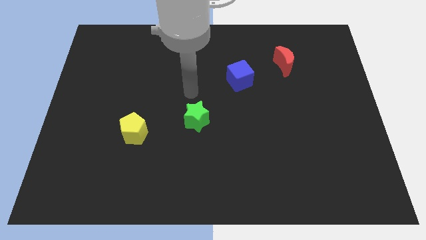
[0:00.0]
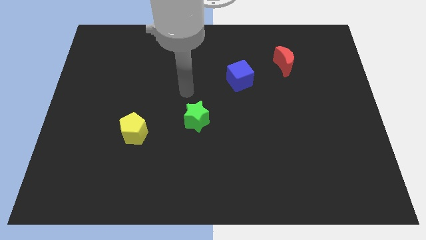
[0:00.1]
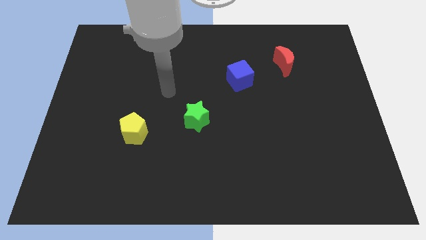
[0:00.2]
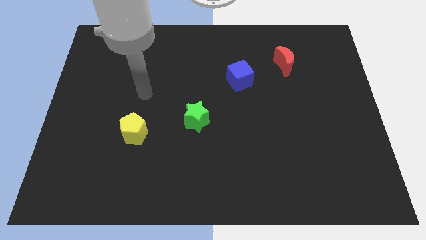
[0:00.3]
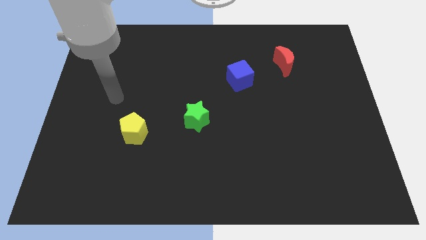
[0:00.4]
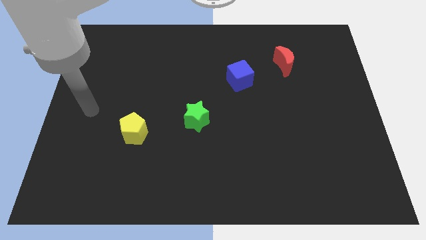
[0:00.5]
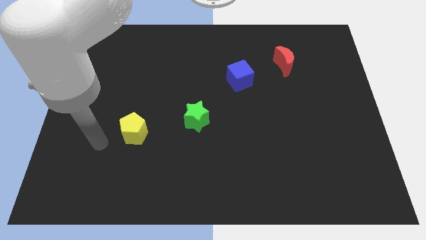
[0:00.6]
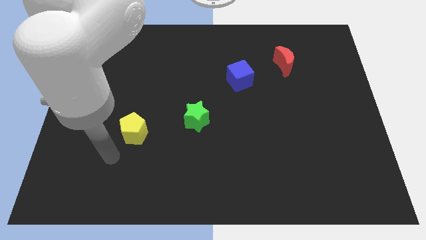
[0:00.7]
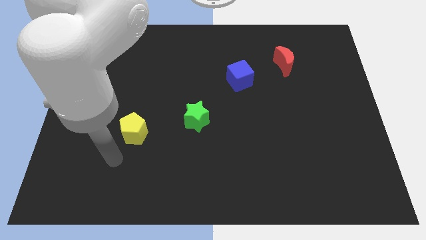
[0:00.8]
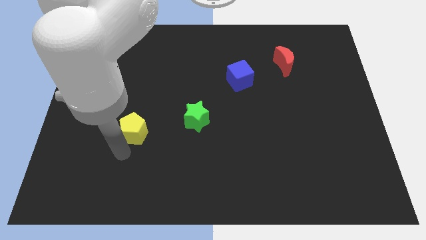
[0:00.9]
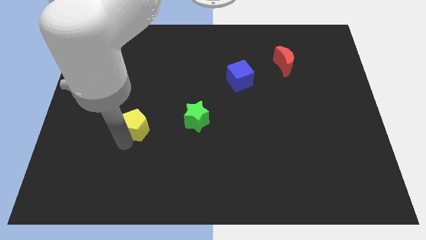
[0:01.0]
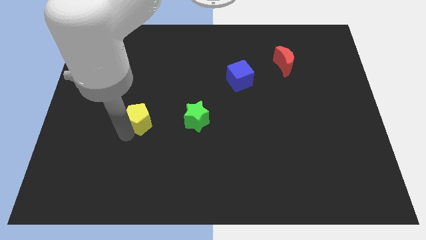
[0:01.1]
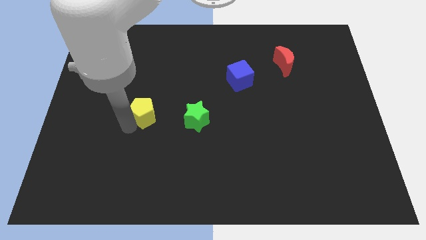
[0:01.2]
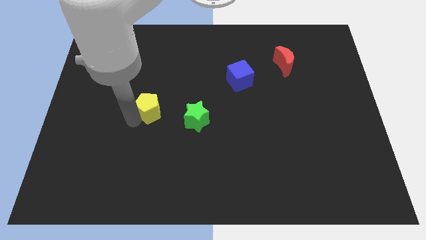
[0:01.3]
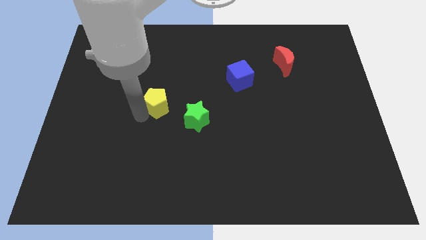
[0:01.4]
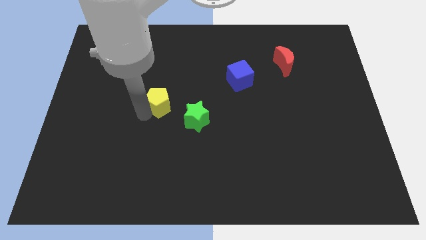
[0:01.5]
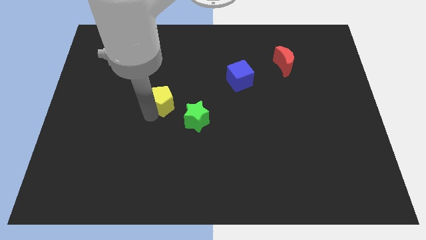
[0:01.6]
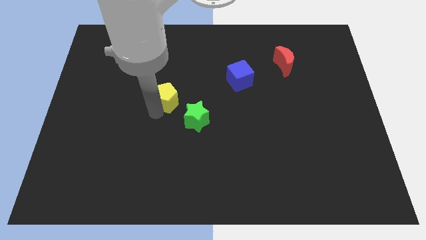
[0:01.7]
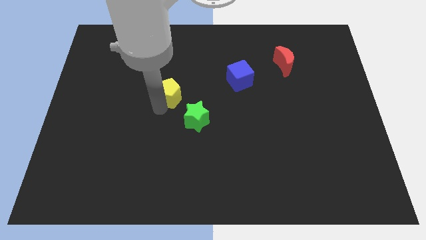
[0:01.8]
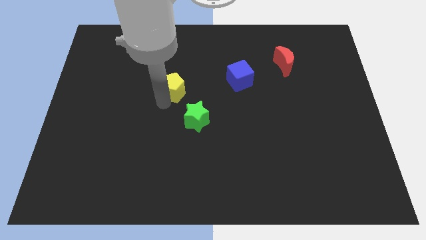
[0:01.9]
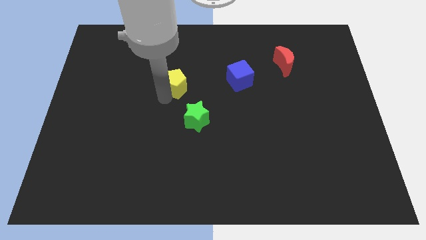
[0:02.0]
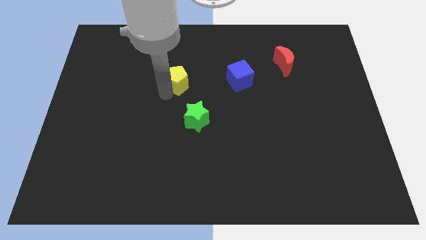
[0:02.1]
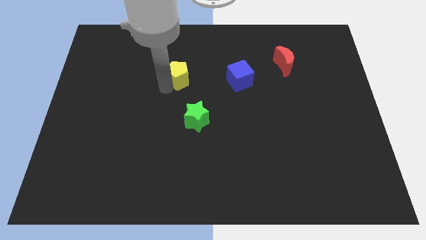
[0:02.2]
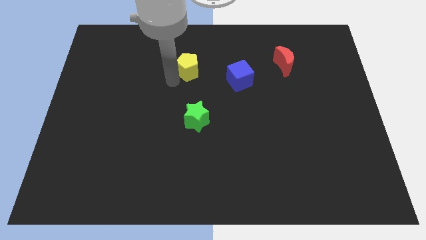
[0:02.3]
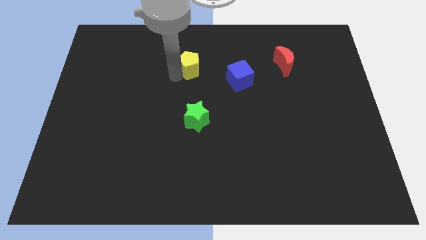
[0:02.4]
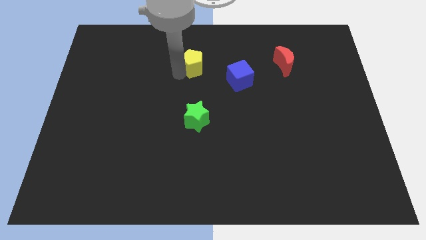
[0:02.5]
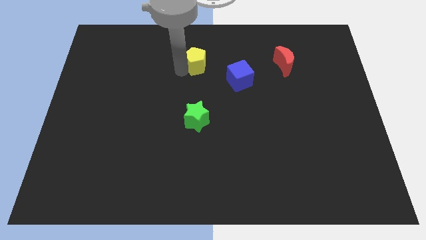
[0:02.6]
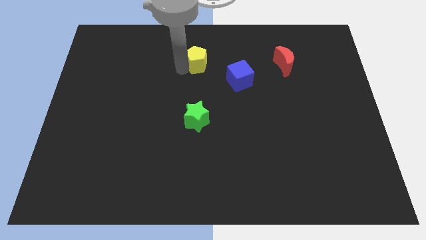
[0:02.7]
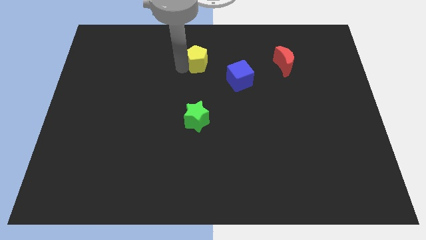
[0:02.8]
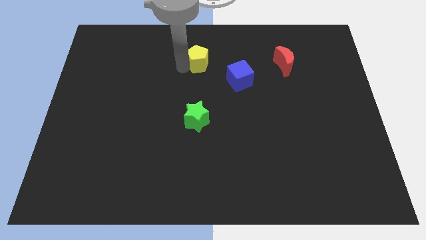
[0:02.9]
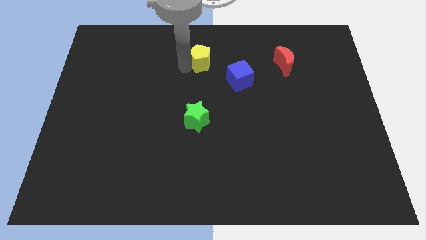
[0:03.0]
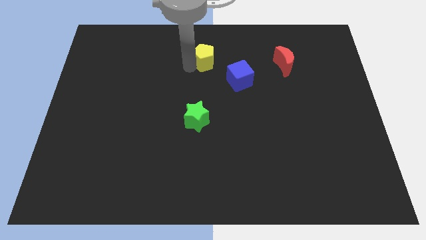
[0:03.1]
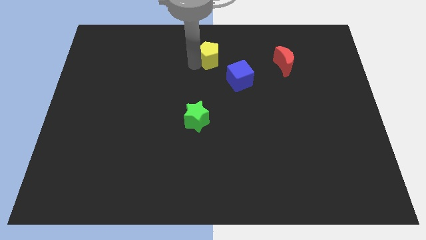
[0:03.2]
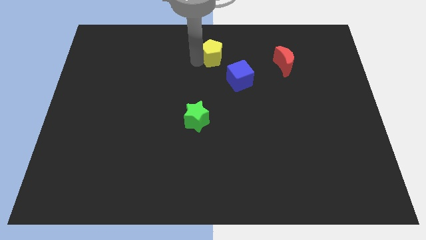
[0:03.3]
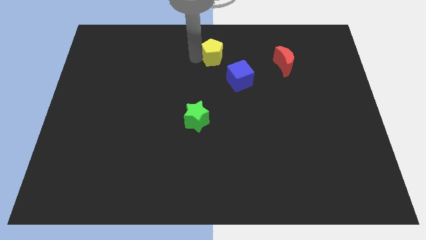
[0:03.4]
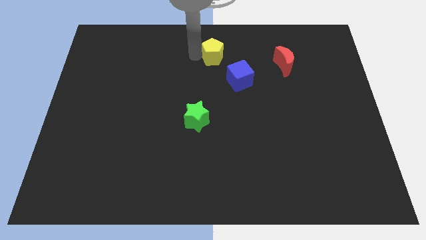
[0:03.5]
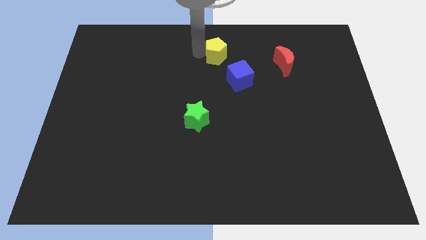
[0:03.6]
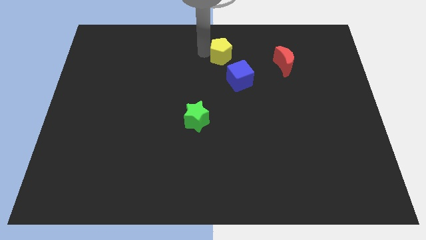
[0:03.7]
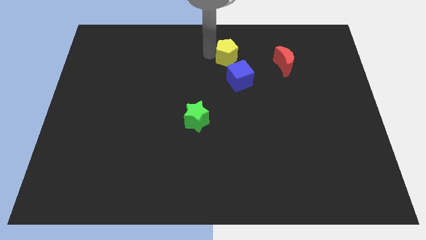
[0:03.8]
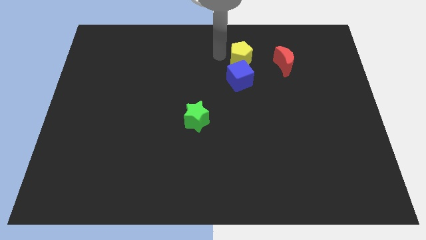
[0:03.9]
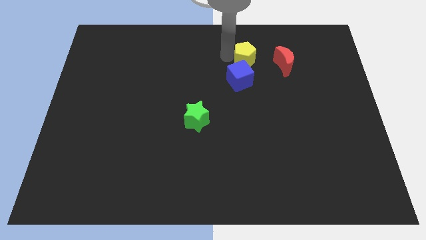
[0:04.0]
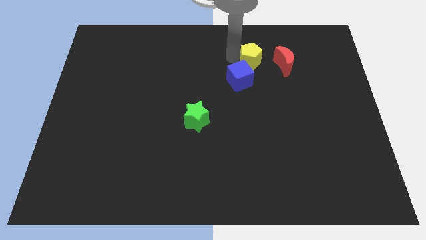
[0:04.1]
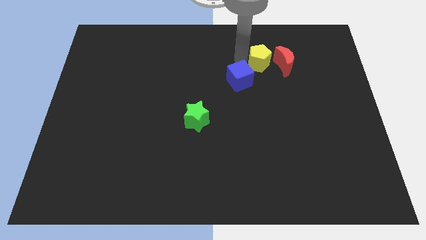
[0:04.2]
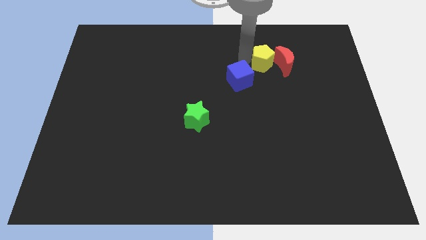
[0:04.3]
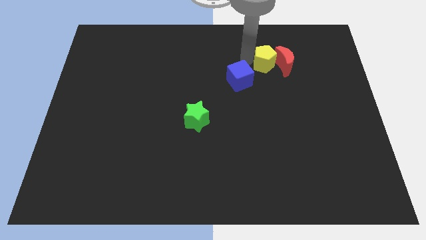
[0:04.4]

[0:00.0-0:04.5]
slide the pentagon towards the moon

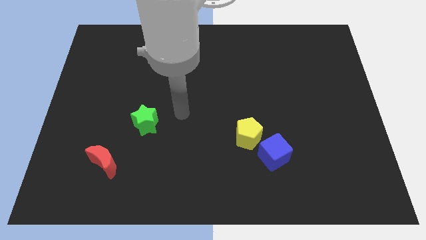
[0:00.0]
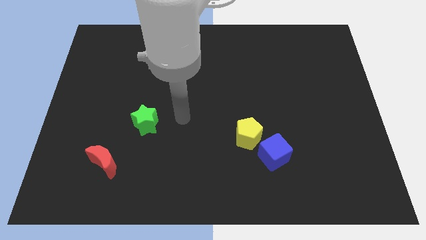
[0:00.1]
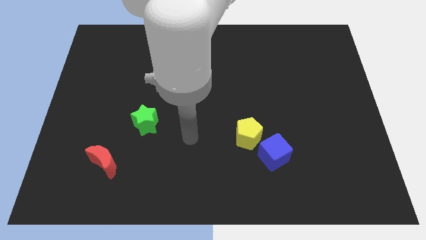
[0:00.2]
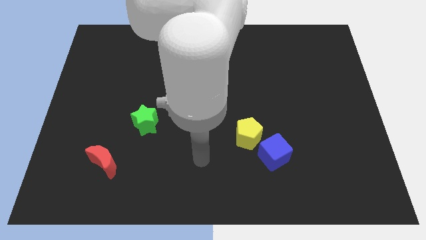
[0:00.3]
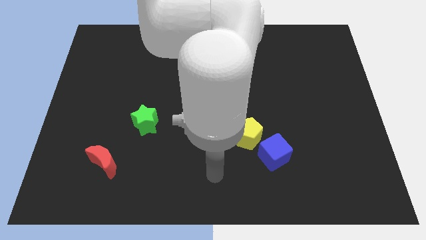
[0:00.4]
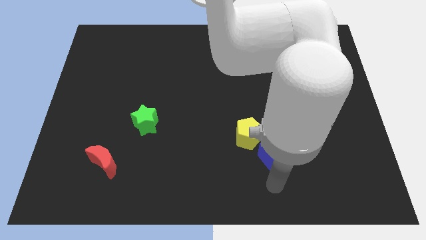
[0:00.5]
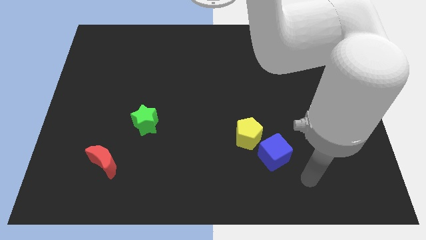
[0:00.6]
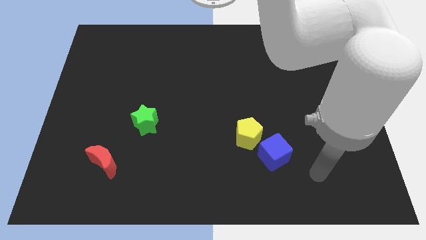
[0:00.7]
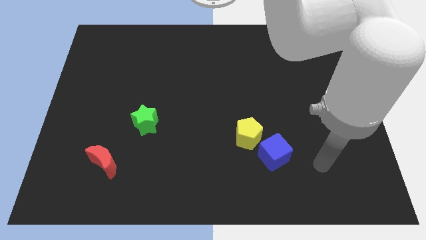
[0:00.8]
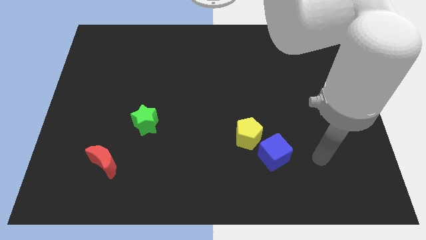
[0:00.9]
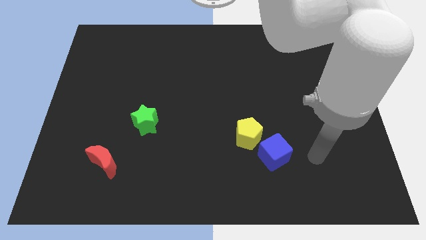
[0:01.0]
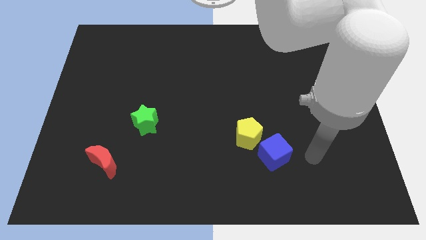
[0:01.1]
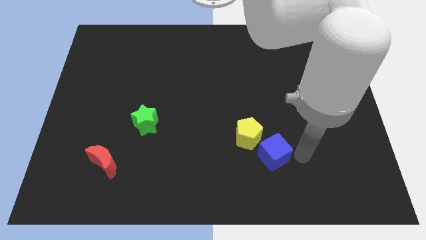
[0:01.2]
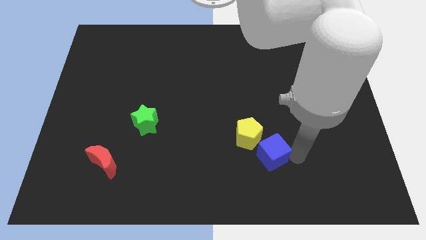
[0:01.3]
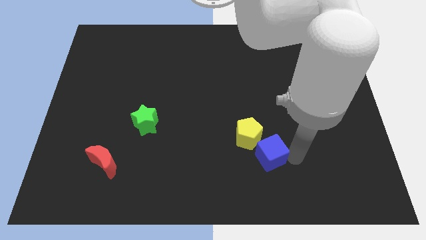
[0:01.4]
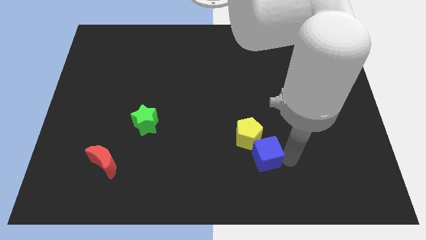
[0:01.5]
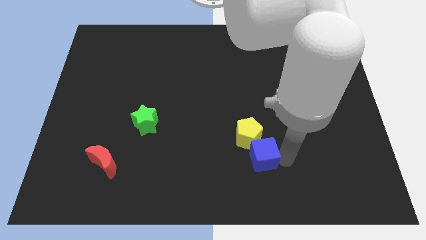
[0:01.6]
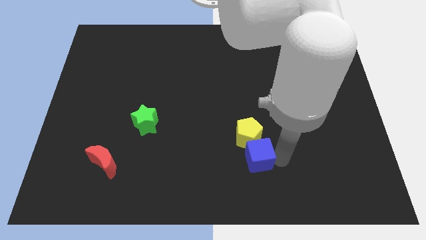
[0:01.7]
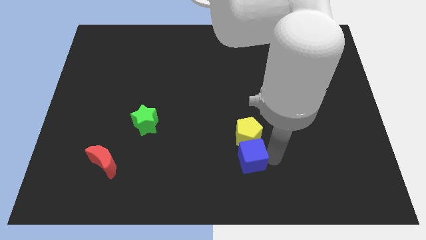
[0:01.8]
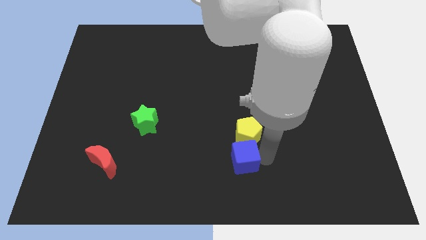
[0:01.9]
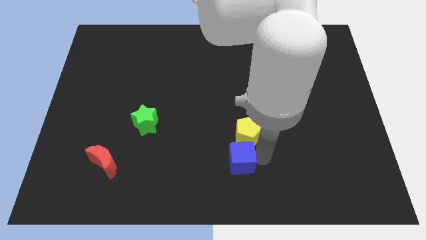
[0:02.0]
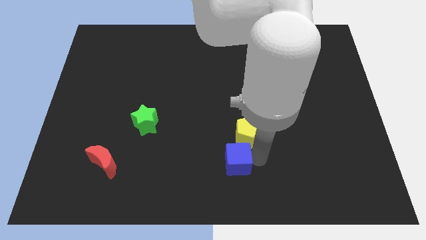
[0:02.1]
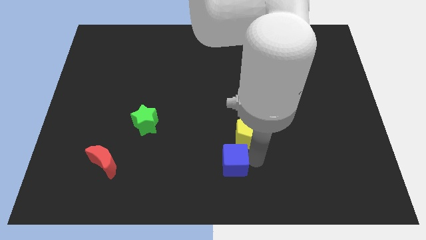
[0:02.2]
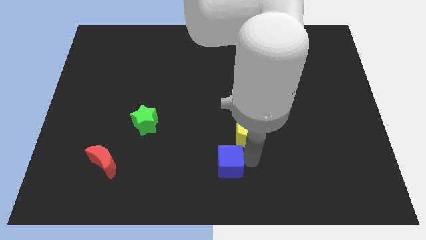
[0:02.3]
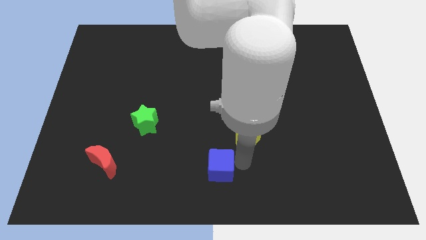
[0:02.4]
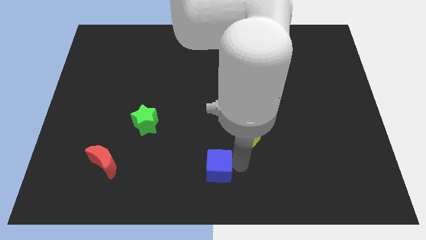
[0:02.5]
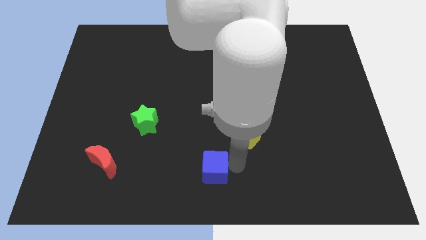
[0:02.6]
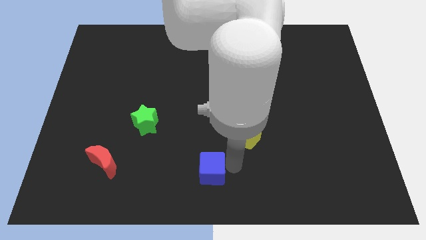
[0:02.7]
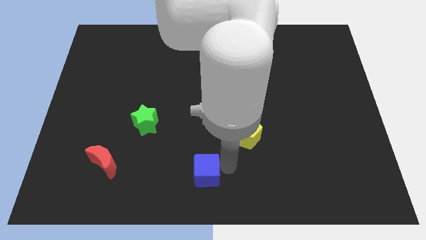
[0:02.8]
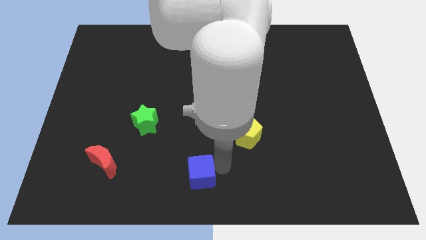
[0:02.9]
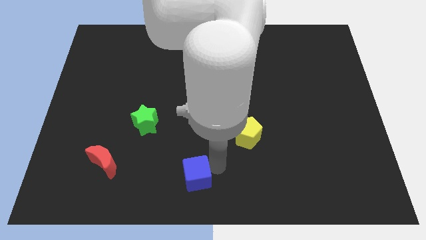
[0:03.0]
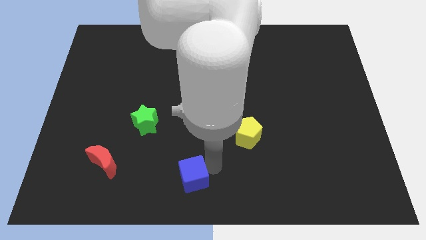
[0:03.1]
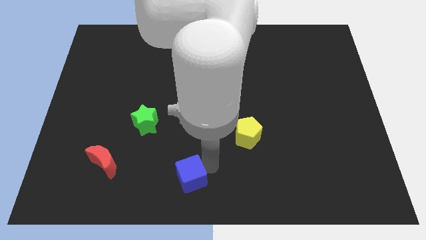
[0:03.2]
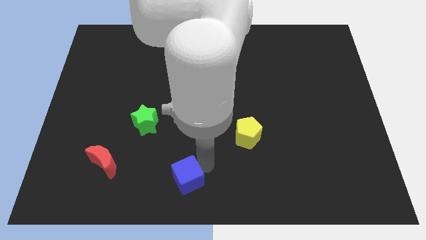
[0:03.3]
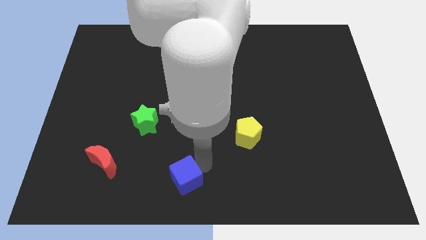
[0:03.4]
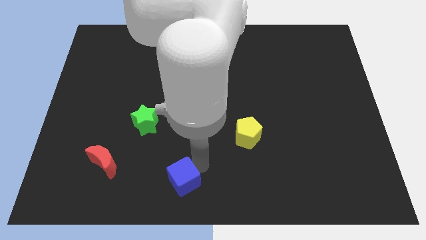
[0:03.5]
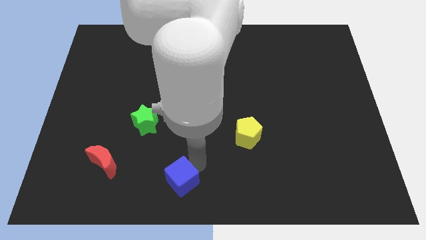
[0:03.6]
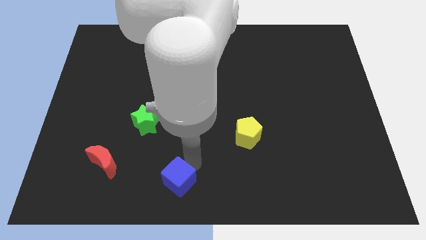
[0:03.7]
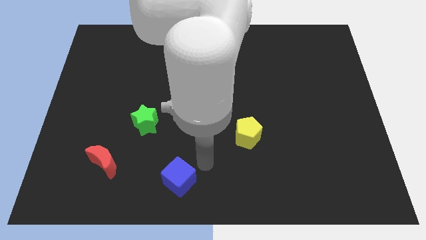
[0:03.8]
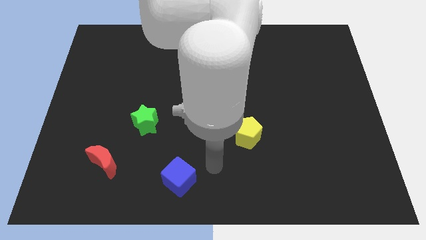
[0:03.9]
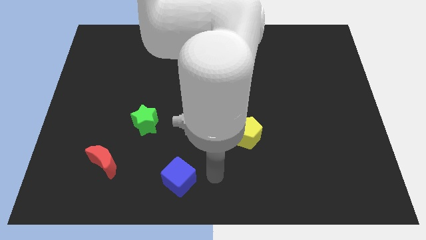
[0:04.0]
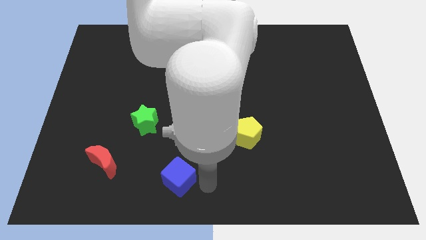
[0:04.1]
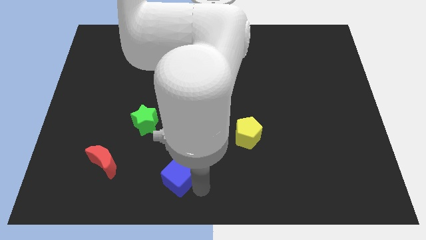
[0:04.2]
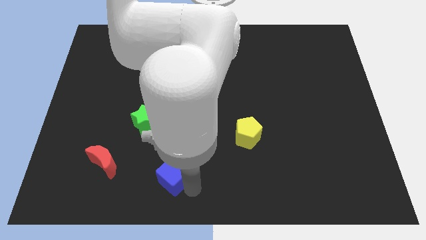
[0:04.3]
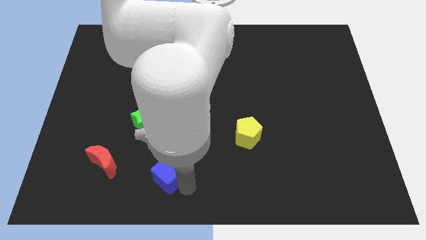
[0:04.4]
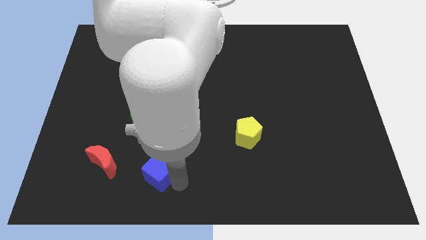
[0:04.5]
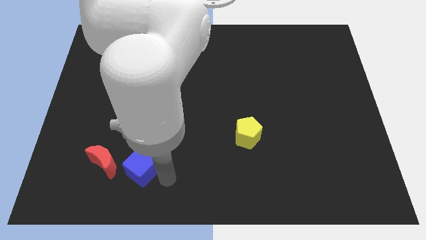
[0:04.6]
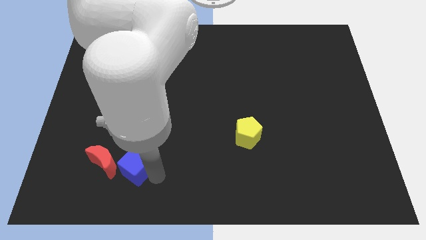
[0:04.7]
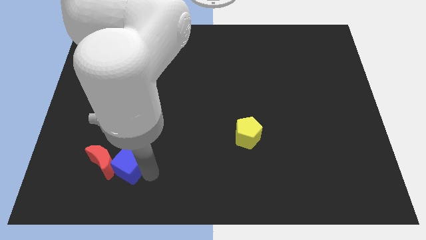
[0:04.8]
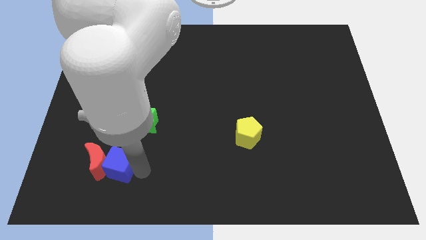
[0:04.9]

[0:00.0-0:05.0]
put the cube to the moon
